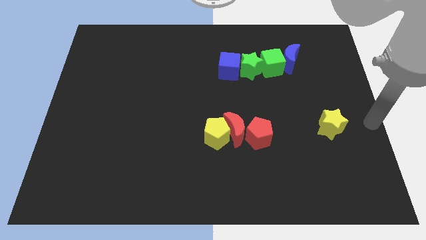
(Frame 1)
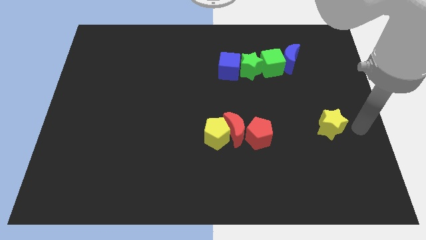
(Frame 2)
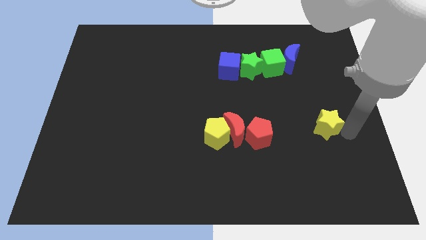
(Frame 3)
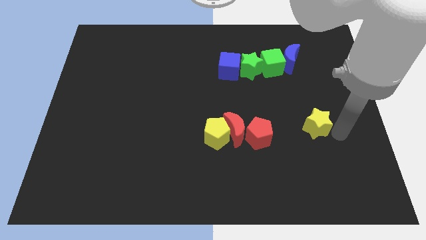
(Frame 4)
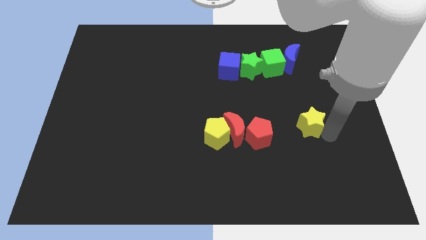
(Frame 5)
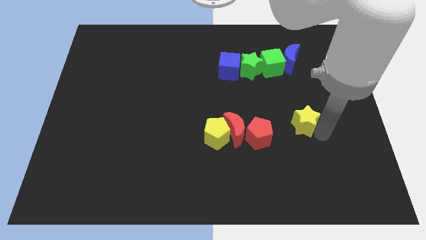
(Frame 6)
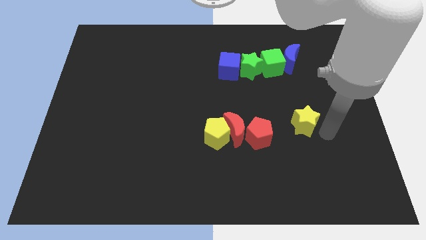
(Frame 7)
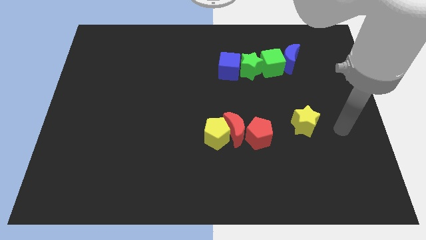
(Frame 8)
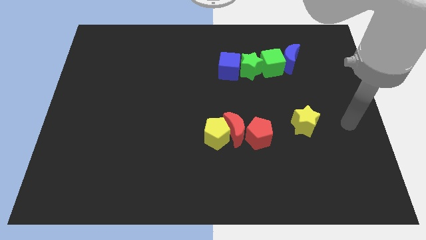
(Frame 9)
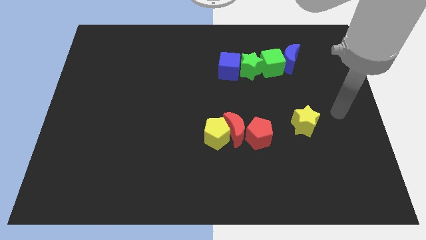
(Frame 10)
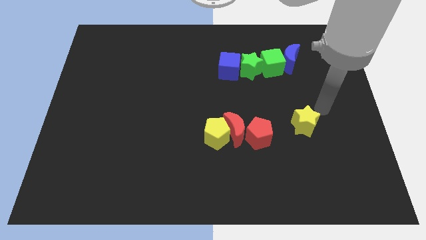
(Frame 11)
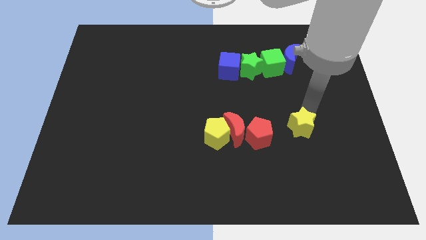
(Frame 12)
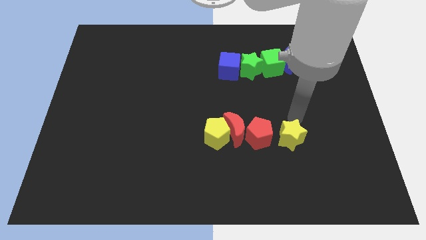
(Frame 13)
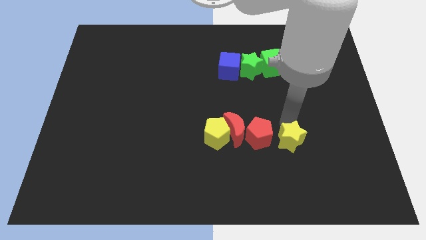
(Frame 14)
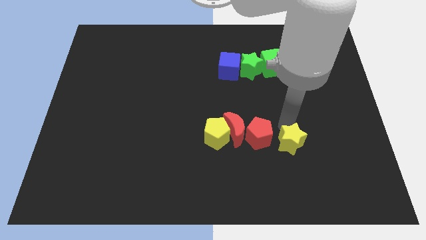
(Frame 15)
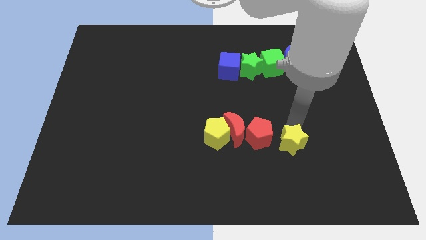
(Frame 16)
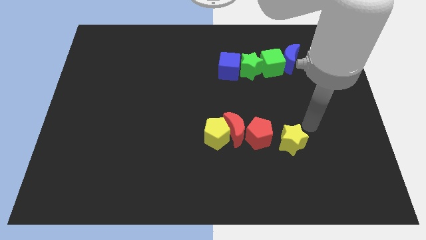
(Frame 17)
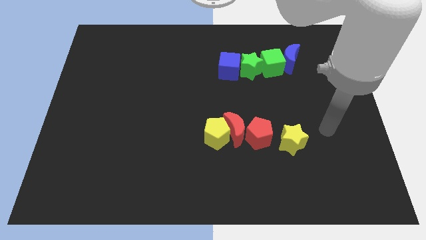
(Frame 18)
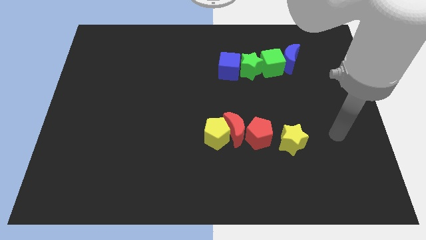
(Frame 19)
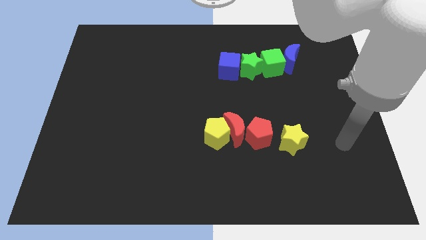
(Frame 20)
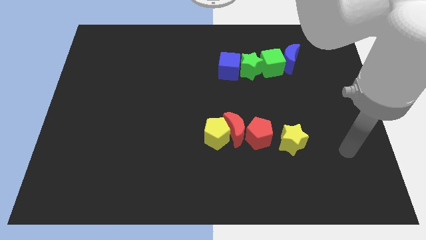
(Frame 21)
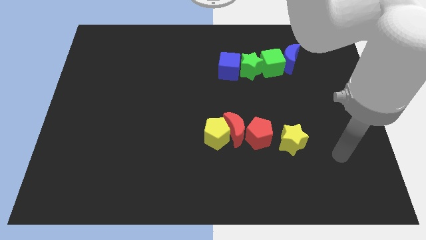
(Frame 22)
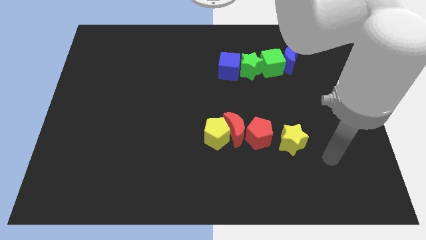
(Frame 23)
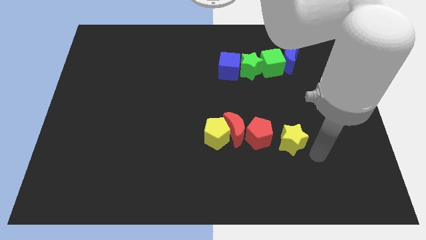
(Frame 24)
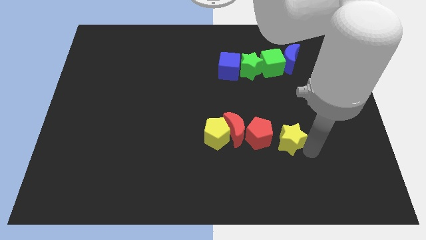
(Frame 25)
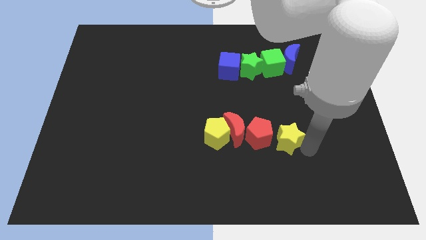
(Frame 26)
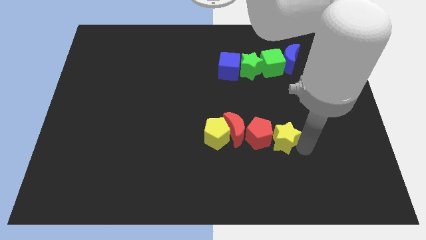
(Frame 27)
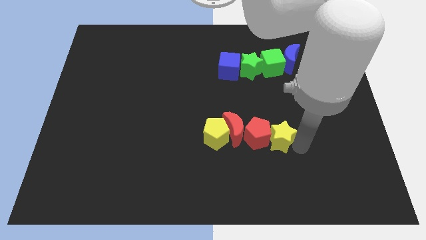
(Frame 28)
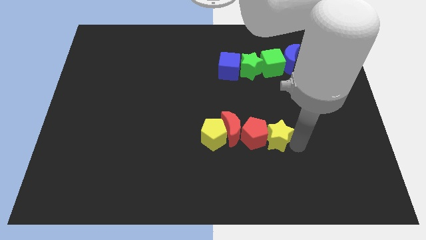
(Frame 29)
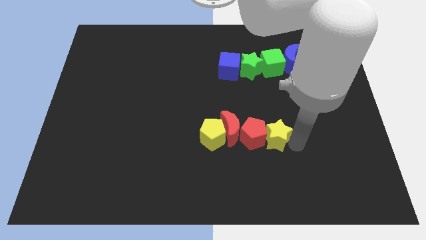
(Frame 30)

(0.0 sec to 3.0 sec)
push the yellow star into the right of red pentagon

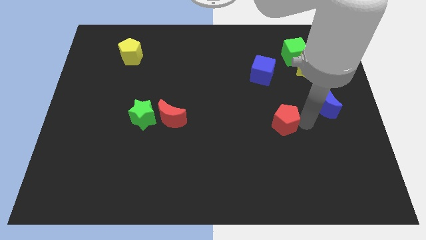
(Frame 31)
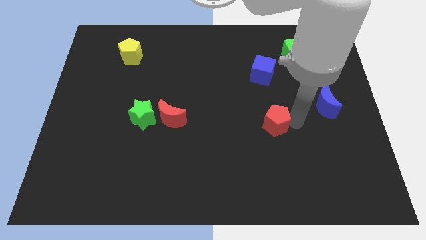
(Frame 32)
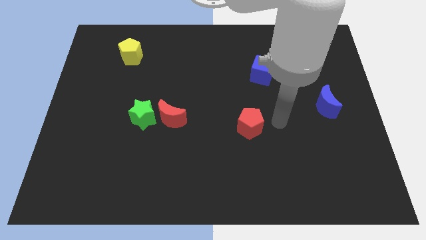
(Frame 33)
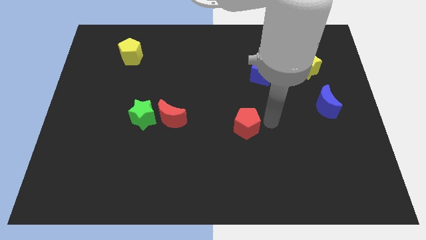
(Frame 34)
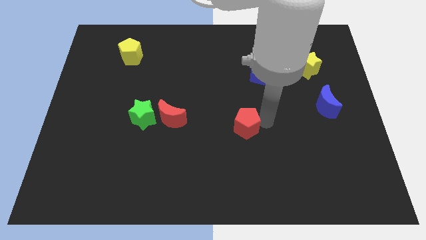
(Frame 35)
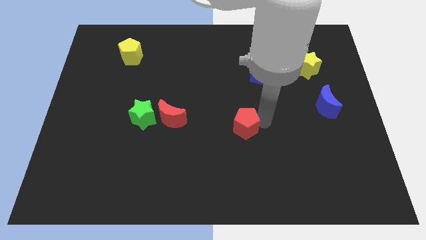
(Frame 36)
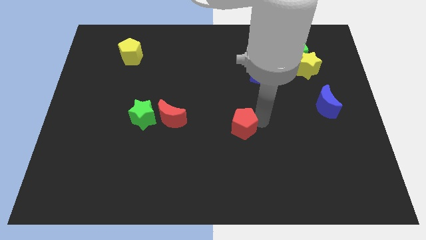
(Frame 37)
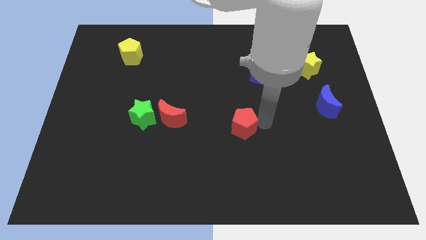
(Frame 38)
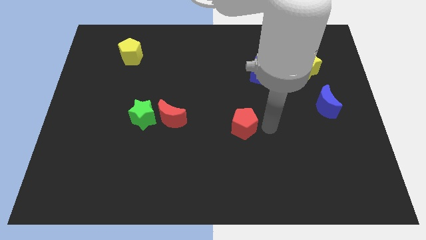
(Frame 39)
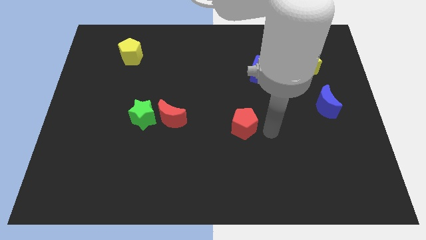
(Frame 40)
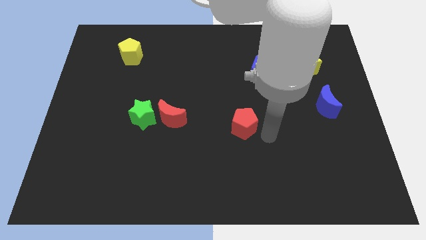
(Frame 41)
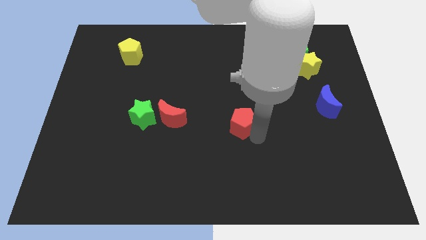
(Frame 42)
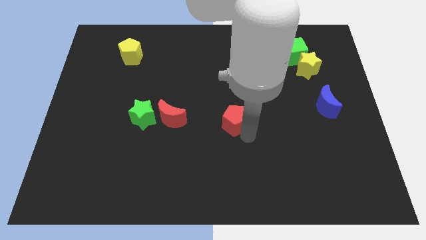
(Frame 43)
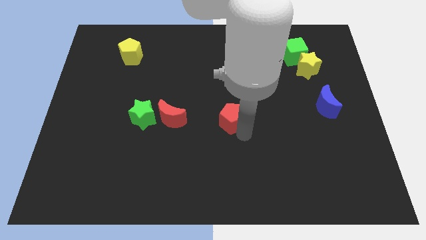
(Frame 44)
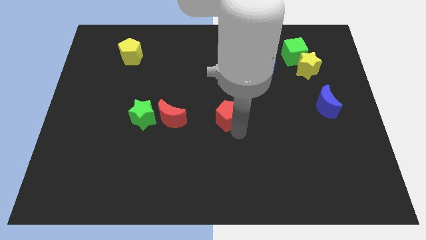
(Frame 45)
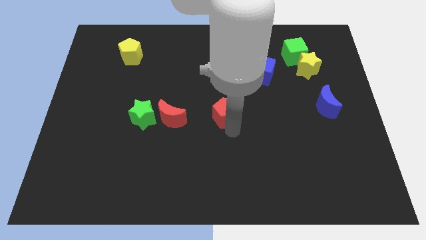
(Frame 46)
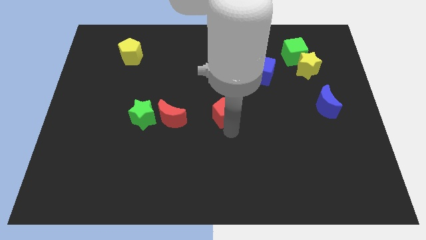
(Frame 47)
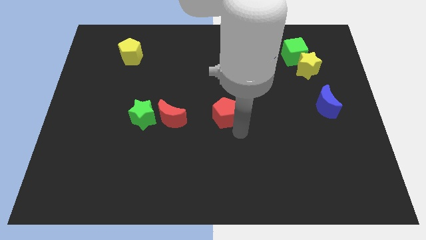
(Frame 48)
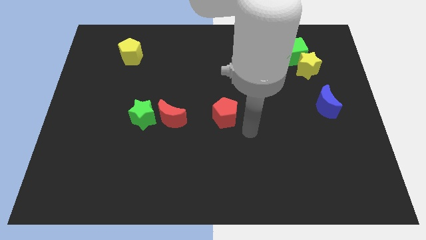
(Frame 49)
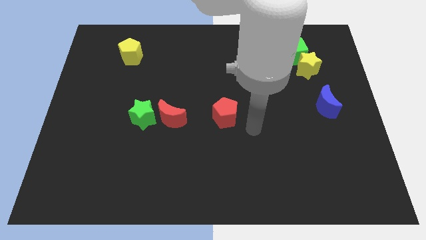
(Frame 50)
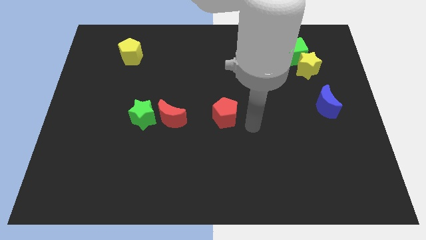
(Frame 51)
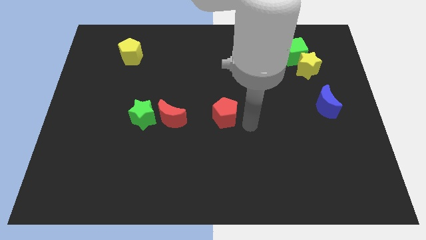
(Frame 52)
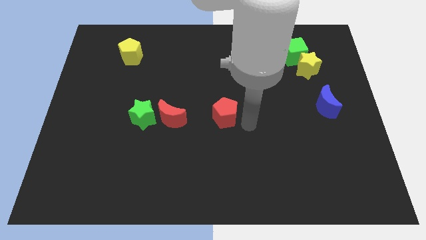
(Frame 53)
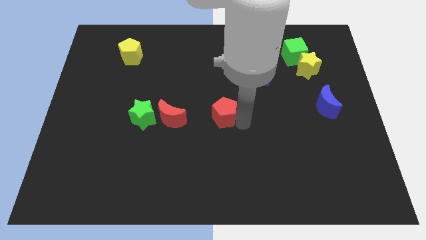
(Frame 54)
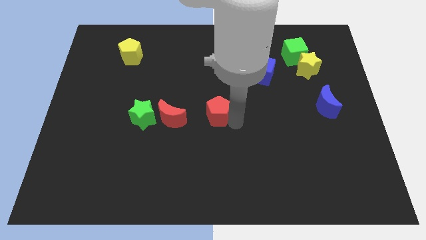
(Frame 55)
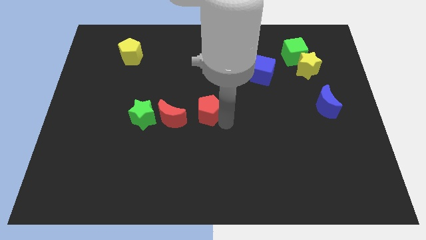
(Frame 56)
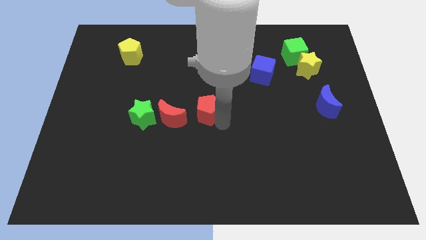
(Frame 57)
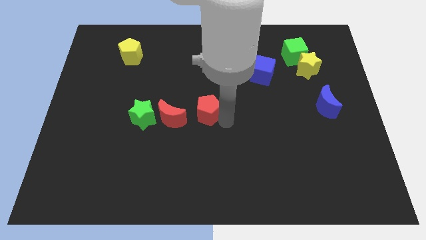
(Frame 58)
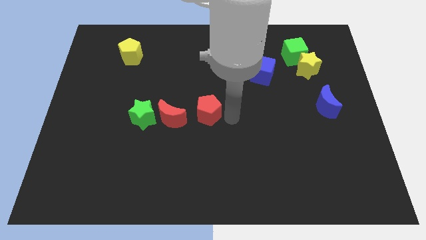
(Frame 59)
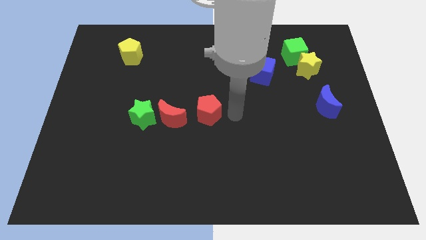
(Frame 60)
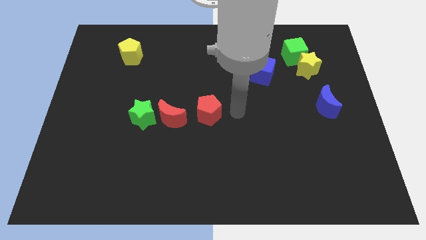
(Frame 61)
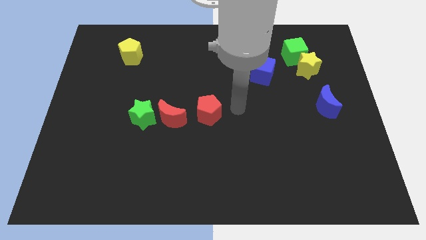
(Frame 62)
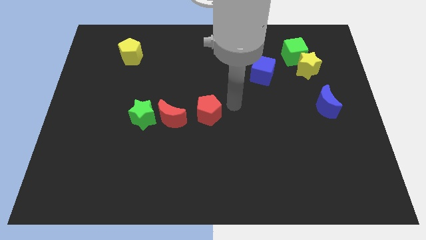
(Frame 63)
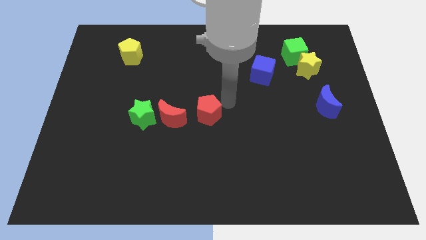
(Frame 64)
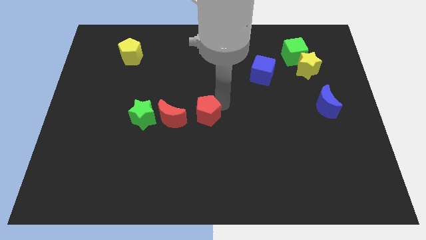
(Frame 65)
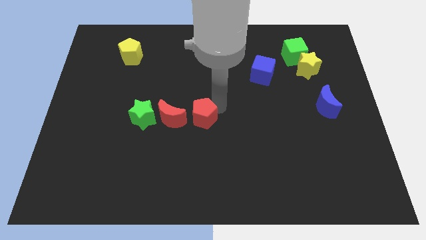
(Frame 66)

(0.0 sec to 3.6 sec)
move red pentagon towards red crescent

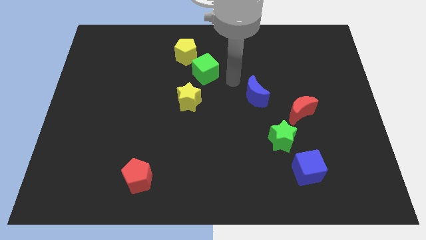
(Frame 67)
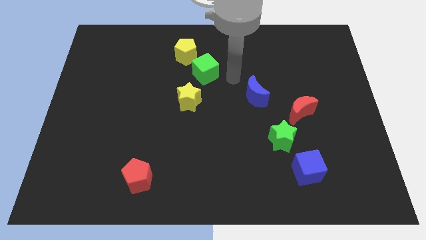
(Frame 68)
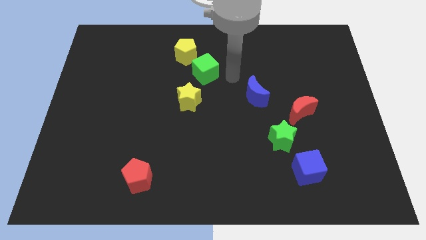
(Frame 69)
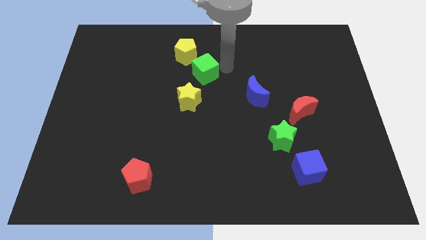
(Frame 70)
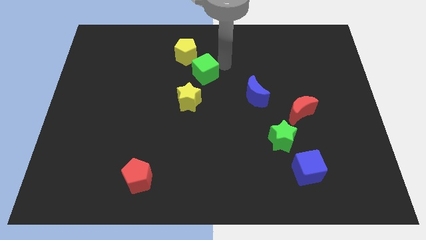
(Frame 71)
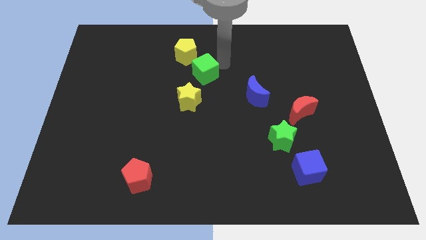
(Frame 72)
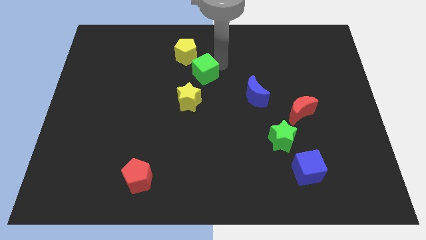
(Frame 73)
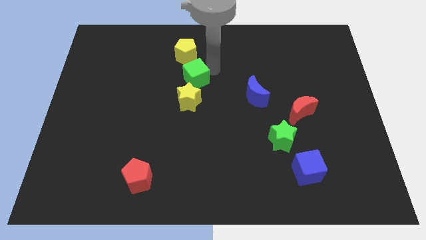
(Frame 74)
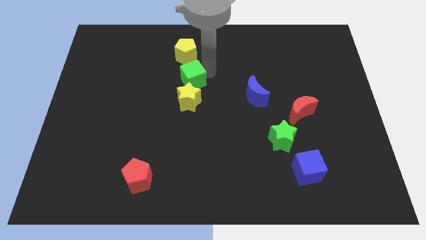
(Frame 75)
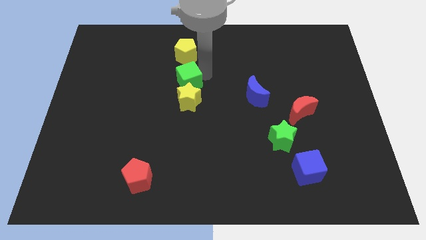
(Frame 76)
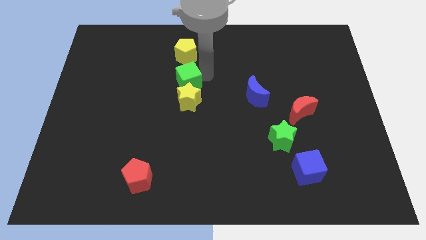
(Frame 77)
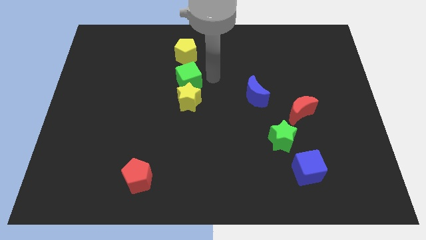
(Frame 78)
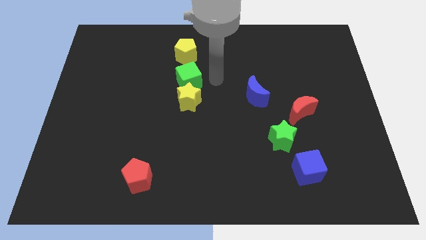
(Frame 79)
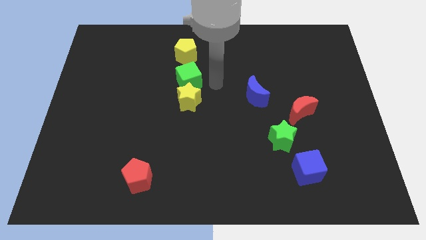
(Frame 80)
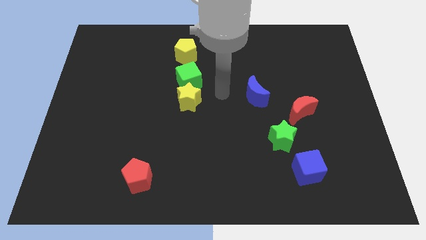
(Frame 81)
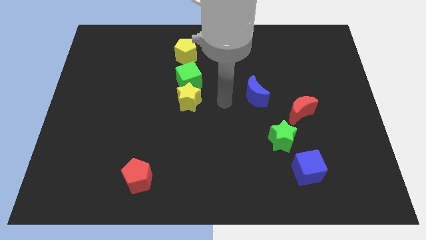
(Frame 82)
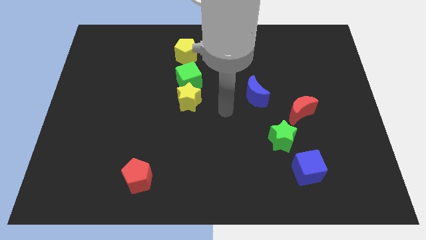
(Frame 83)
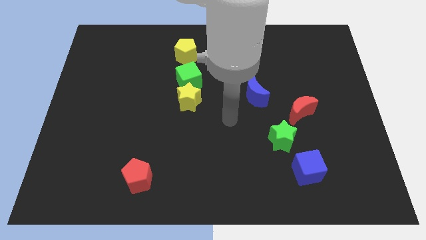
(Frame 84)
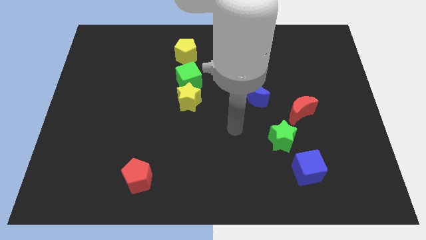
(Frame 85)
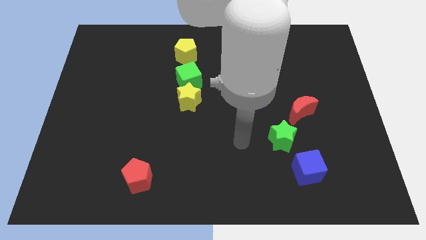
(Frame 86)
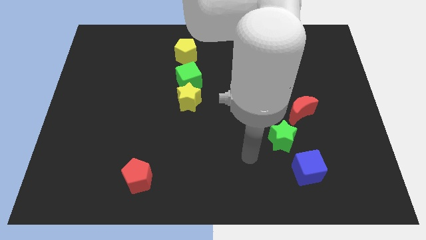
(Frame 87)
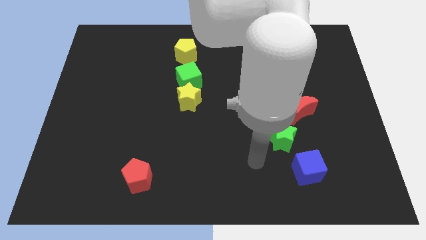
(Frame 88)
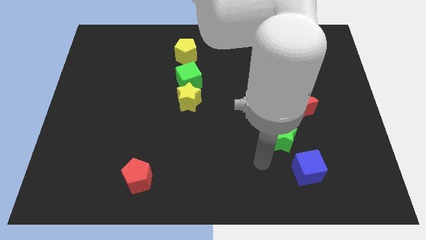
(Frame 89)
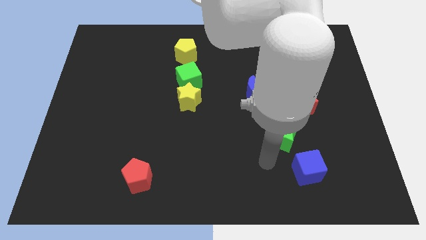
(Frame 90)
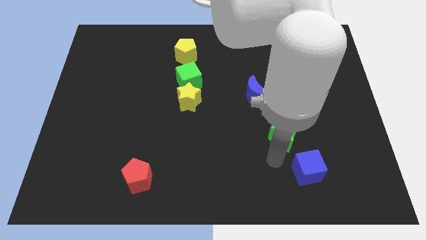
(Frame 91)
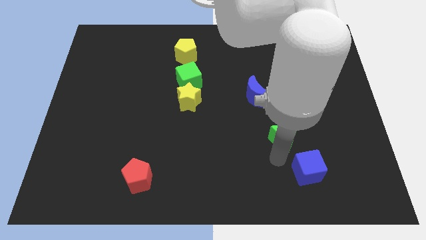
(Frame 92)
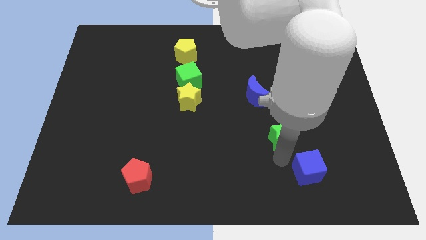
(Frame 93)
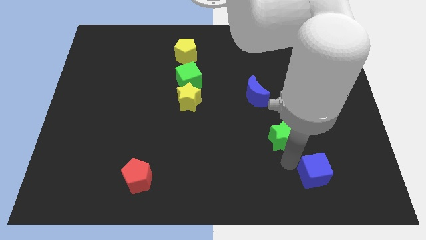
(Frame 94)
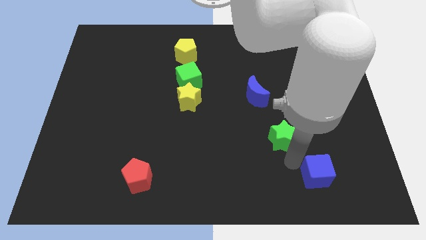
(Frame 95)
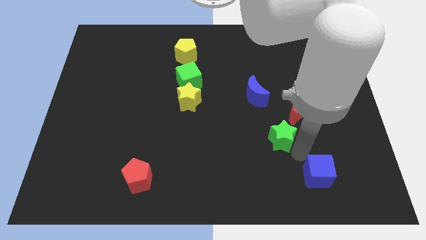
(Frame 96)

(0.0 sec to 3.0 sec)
place your arm in between the green star and blue cube
